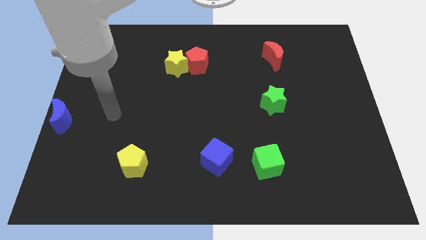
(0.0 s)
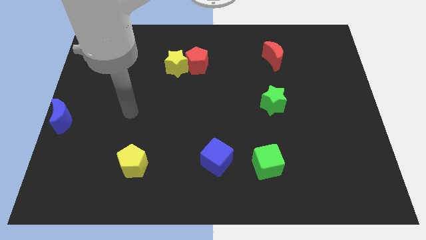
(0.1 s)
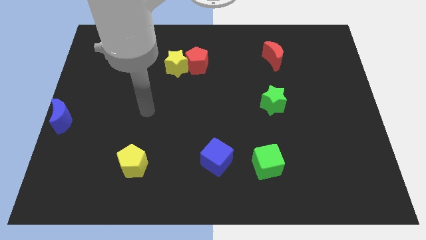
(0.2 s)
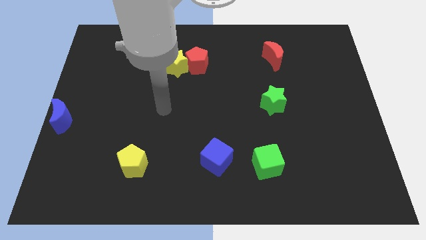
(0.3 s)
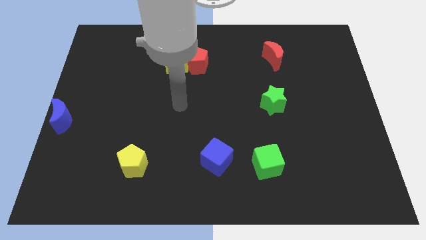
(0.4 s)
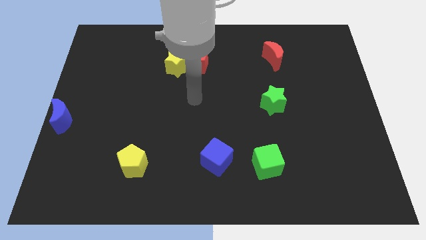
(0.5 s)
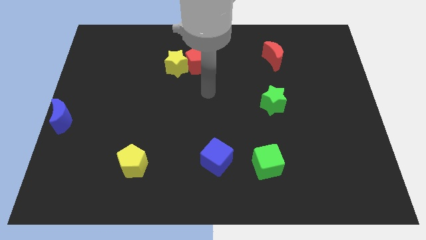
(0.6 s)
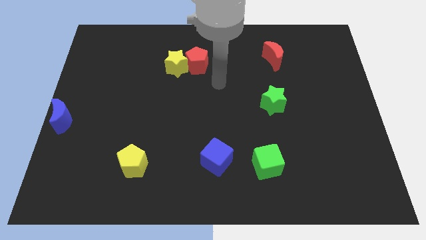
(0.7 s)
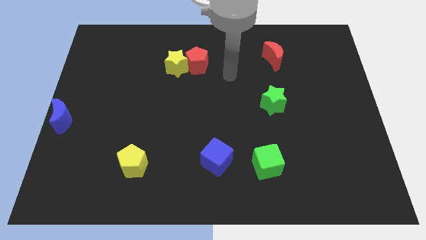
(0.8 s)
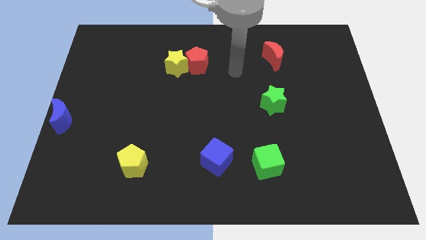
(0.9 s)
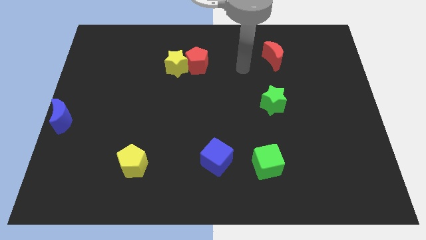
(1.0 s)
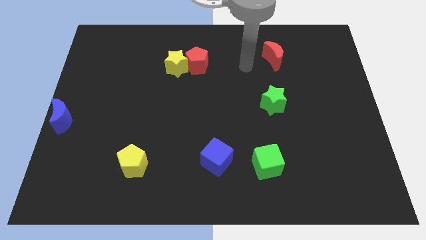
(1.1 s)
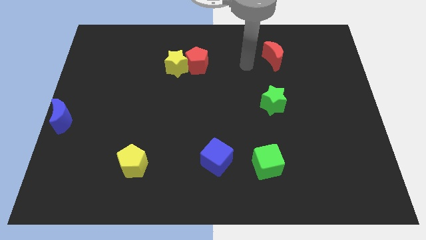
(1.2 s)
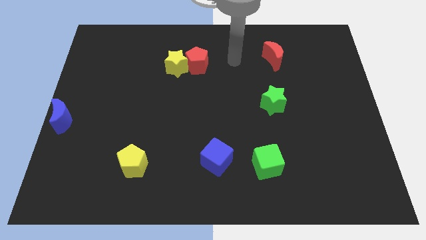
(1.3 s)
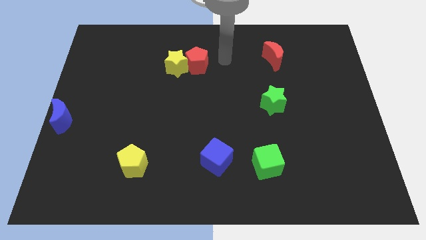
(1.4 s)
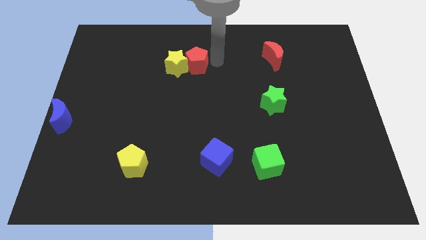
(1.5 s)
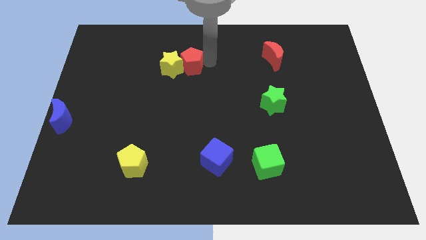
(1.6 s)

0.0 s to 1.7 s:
point the arm to the right of the red pentagon

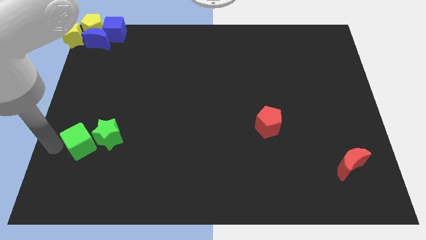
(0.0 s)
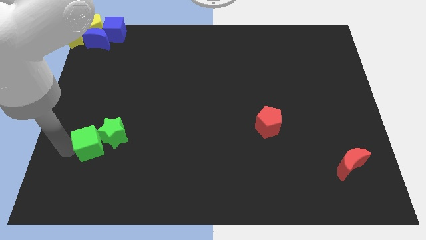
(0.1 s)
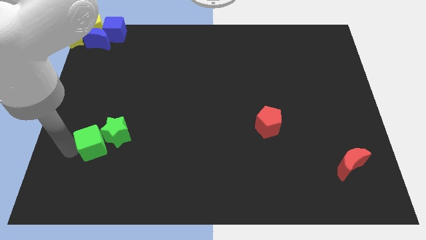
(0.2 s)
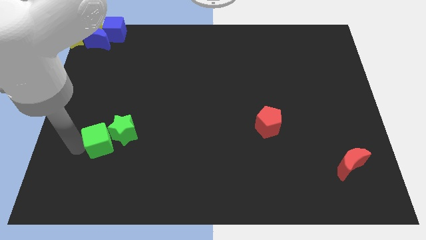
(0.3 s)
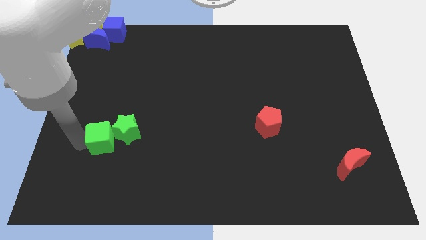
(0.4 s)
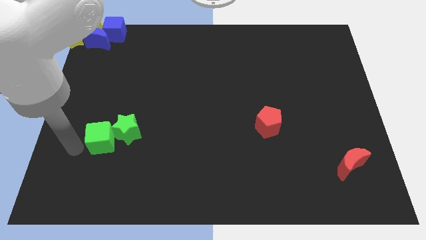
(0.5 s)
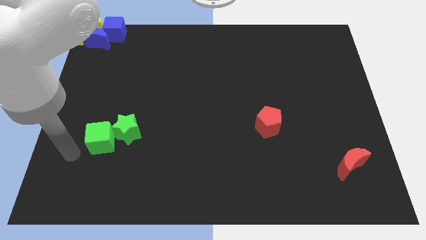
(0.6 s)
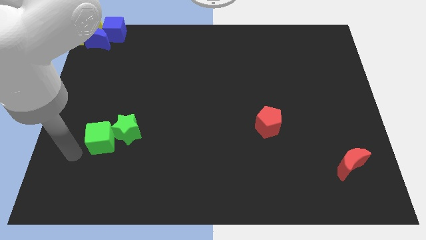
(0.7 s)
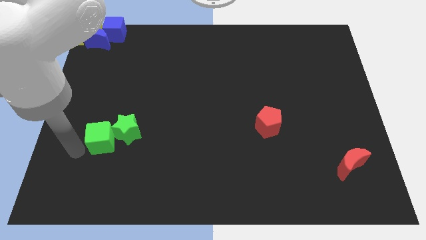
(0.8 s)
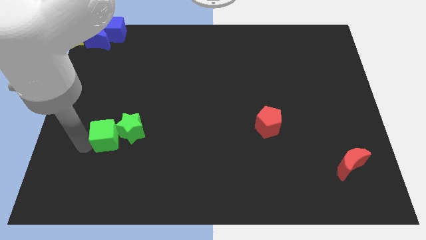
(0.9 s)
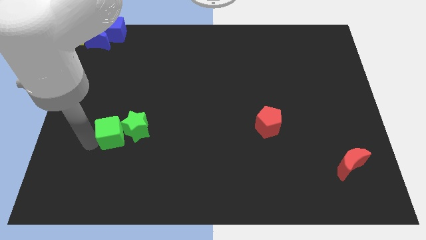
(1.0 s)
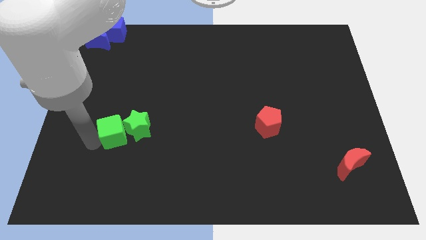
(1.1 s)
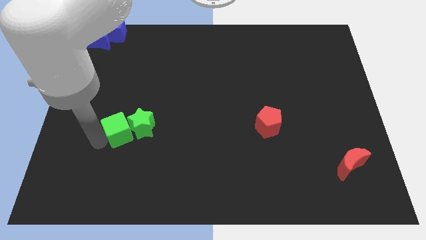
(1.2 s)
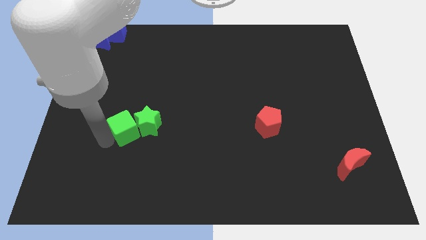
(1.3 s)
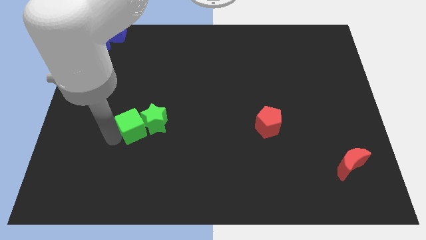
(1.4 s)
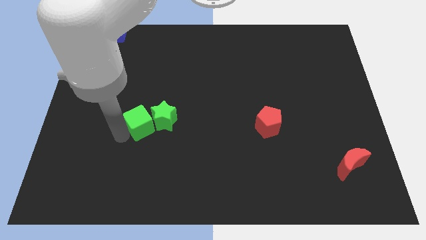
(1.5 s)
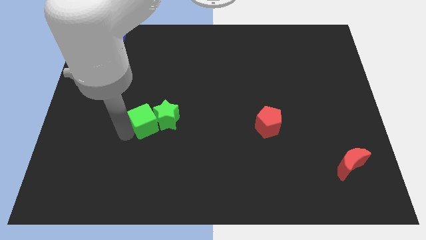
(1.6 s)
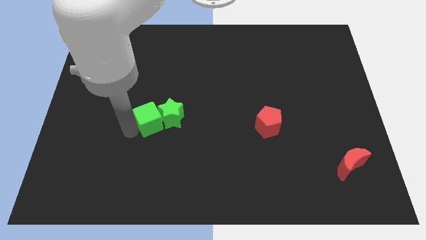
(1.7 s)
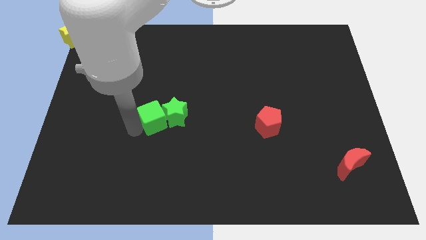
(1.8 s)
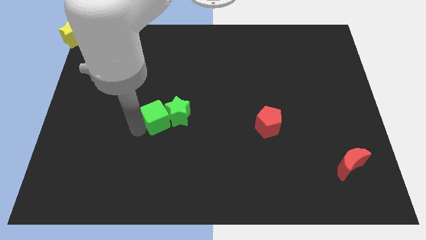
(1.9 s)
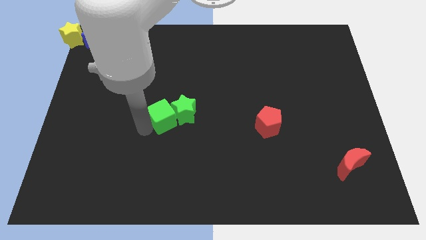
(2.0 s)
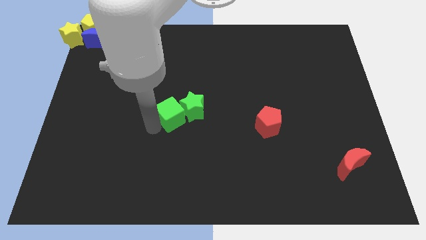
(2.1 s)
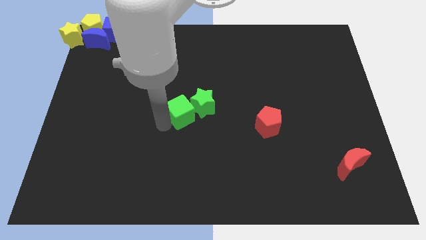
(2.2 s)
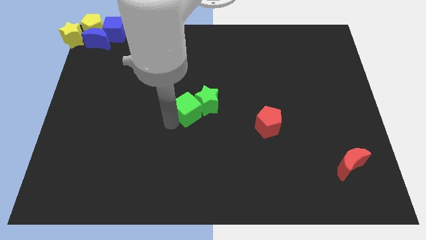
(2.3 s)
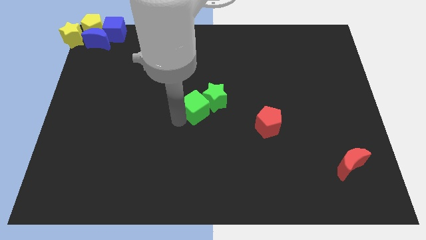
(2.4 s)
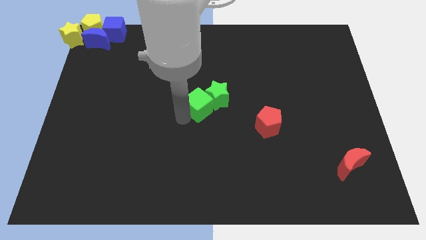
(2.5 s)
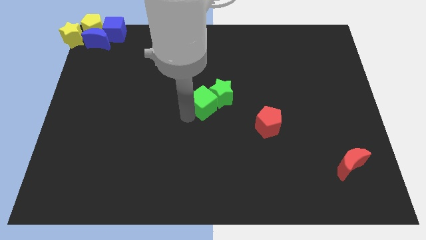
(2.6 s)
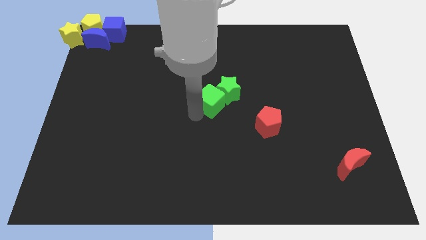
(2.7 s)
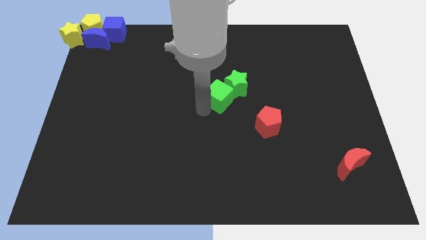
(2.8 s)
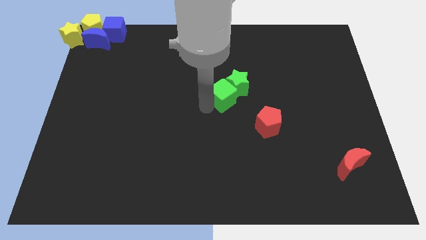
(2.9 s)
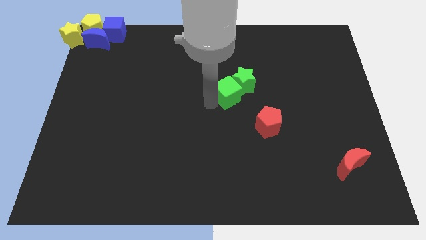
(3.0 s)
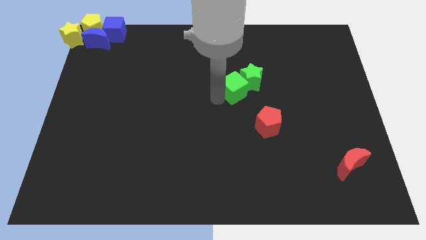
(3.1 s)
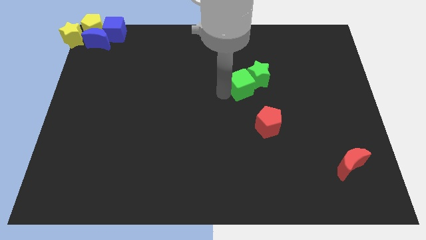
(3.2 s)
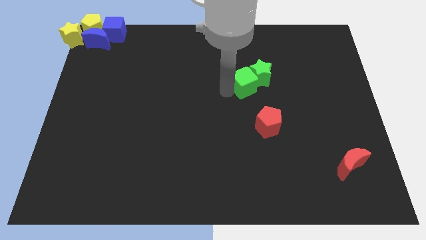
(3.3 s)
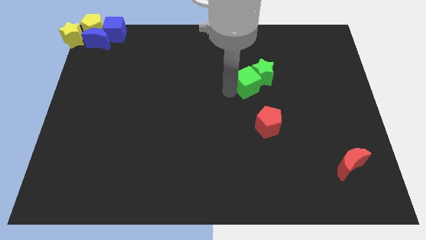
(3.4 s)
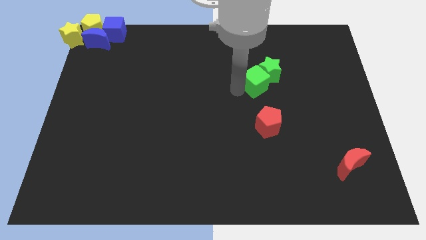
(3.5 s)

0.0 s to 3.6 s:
push the green cube and green star towards the top of the red pentagon

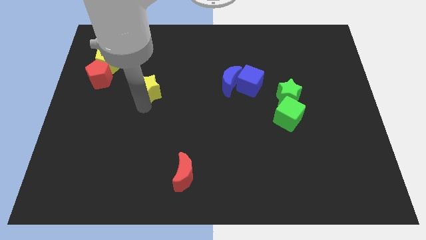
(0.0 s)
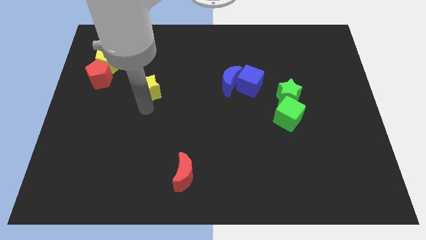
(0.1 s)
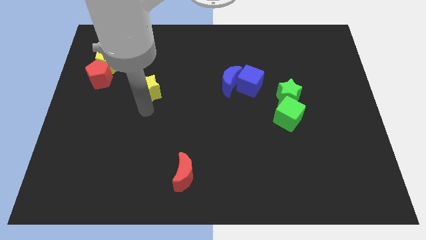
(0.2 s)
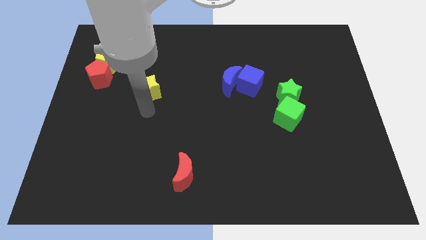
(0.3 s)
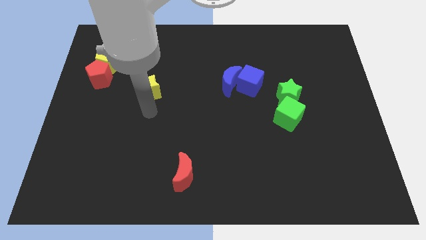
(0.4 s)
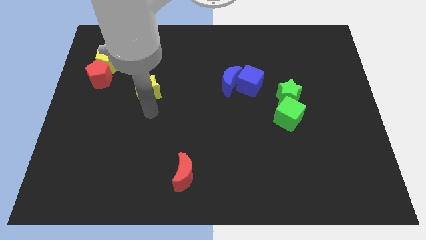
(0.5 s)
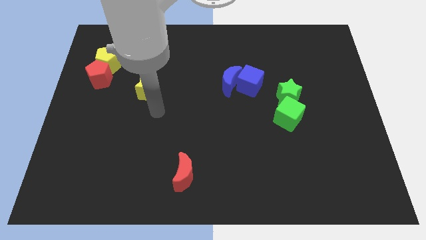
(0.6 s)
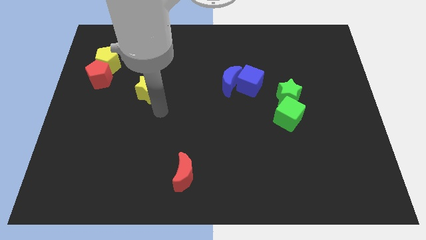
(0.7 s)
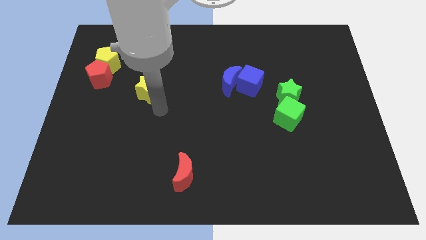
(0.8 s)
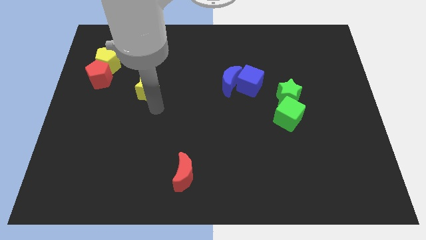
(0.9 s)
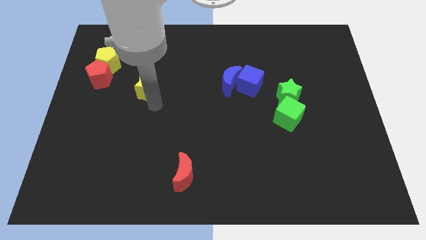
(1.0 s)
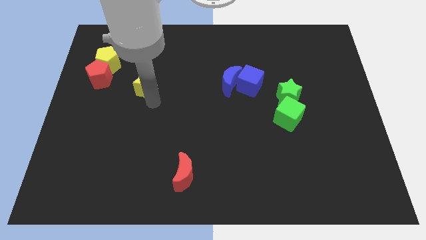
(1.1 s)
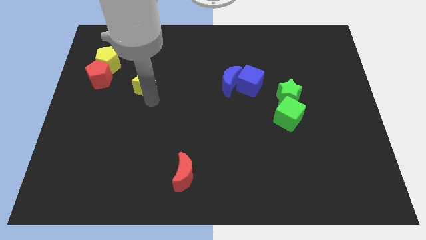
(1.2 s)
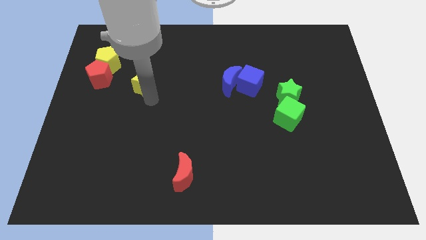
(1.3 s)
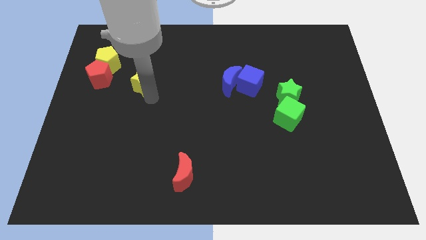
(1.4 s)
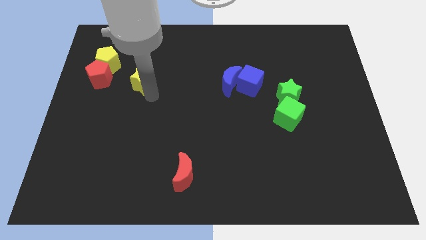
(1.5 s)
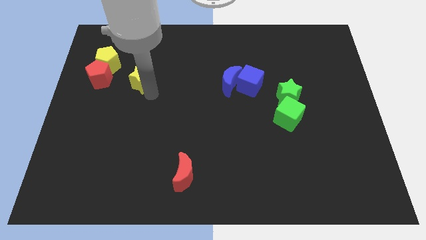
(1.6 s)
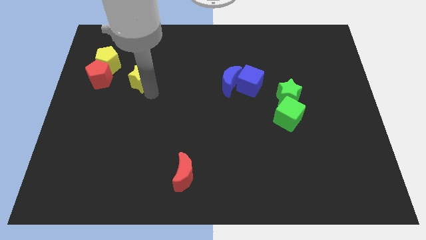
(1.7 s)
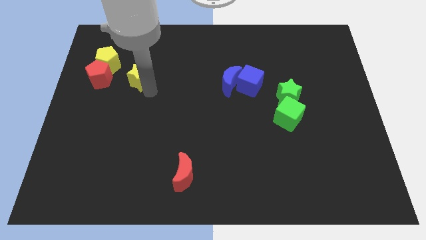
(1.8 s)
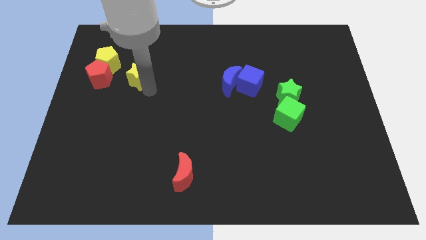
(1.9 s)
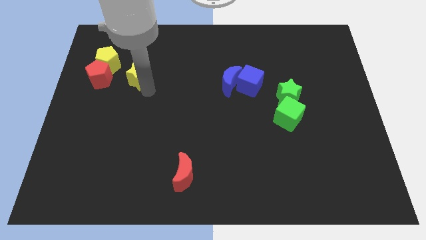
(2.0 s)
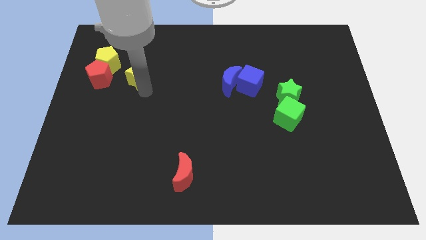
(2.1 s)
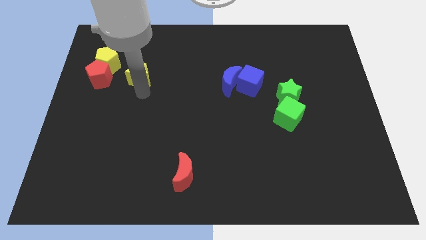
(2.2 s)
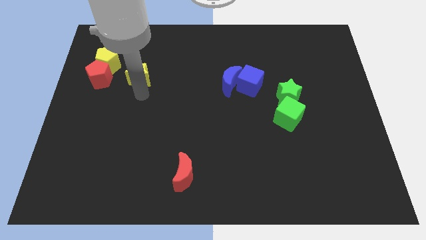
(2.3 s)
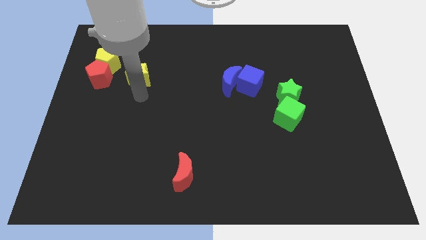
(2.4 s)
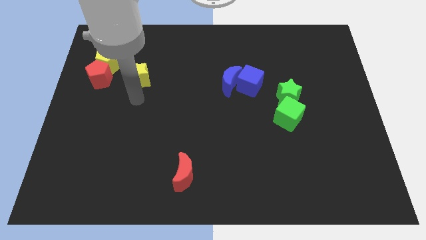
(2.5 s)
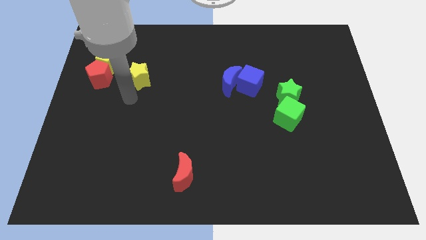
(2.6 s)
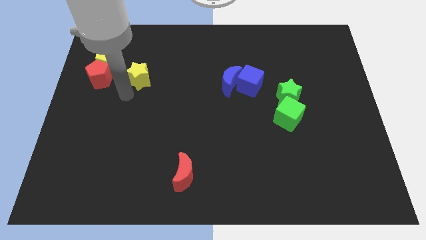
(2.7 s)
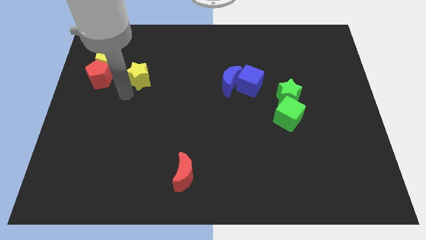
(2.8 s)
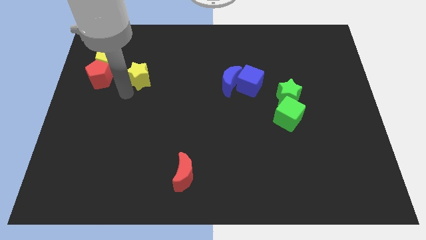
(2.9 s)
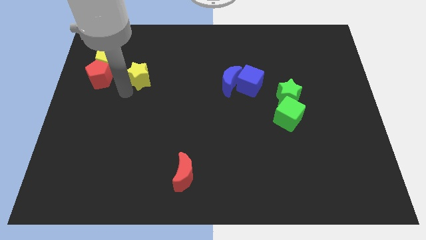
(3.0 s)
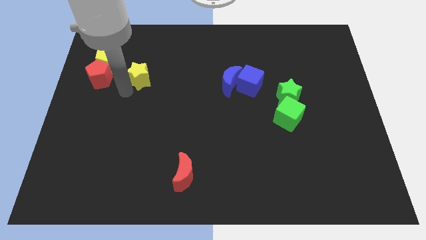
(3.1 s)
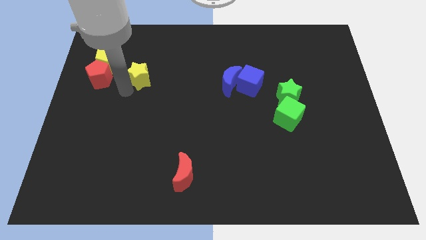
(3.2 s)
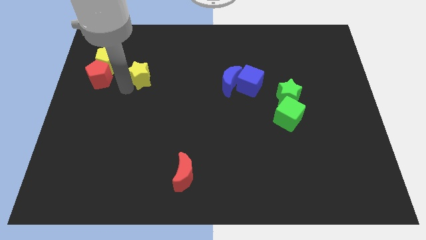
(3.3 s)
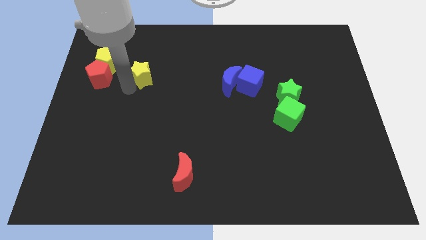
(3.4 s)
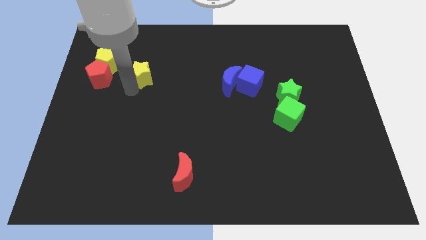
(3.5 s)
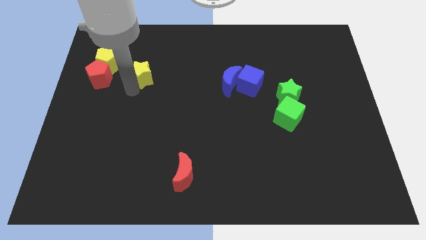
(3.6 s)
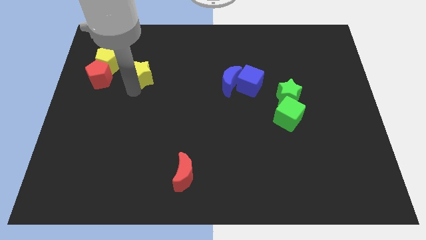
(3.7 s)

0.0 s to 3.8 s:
move the yellow star to the bottom right to the yellow pentagon
